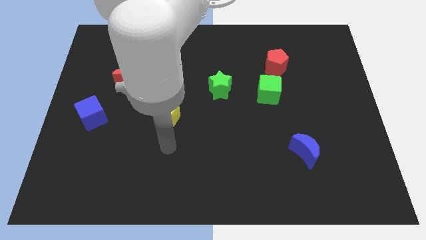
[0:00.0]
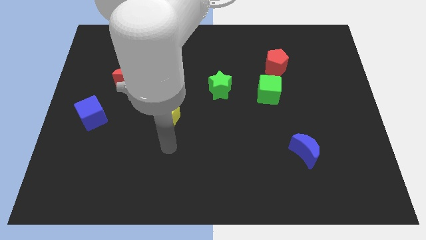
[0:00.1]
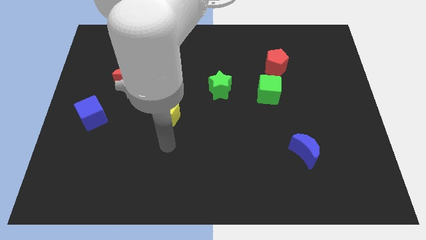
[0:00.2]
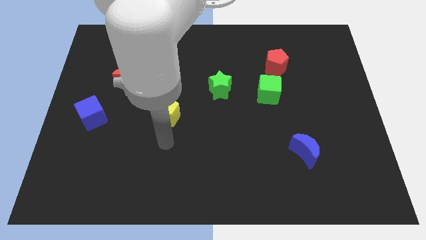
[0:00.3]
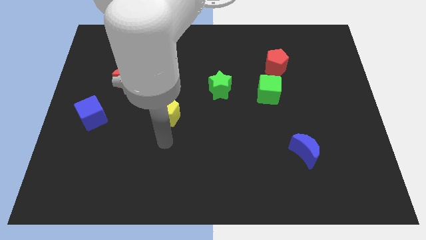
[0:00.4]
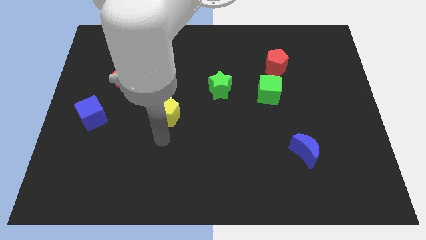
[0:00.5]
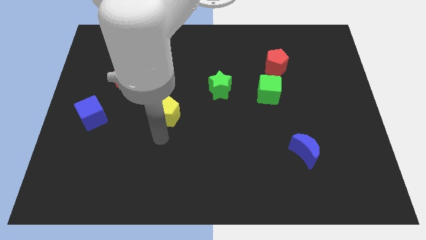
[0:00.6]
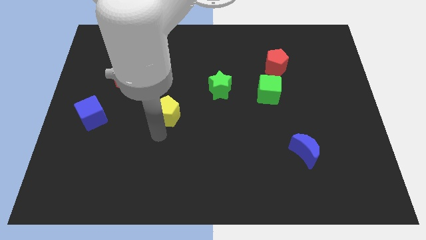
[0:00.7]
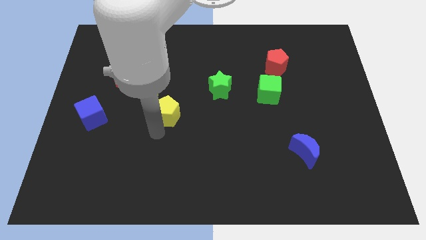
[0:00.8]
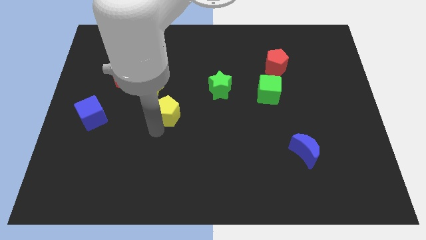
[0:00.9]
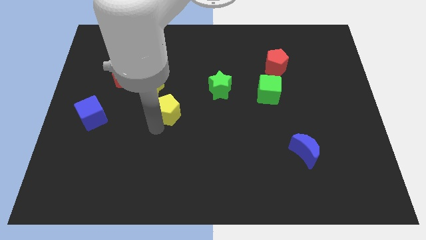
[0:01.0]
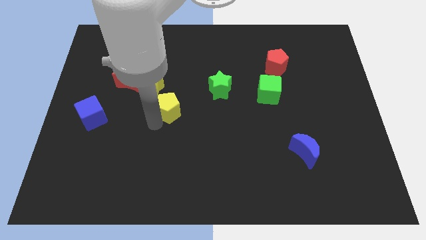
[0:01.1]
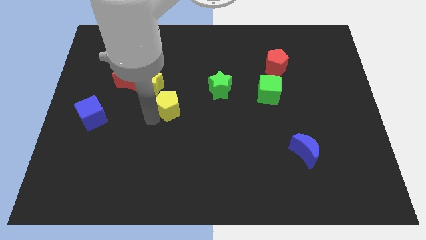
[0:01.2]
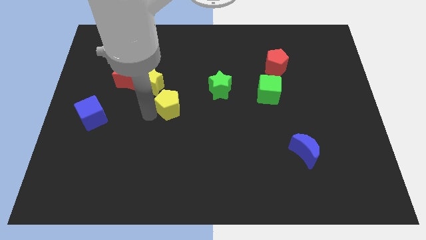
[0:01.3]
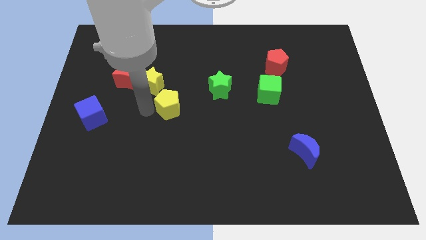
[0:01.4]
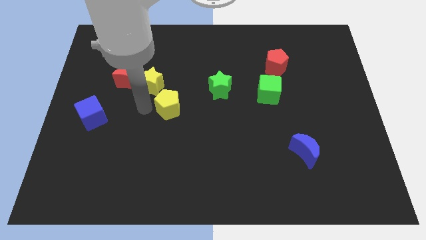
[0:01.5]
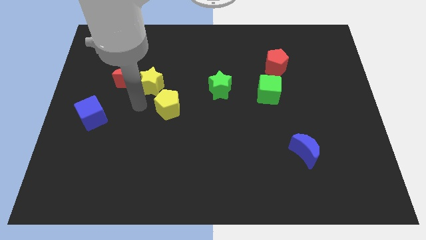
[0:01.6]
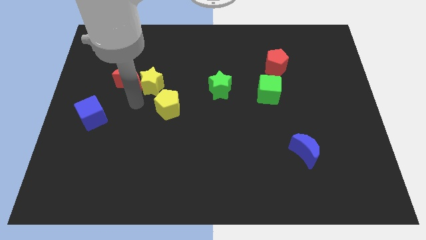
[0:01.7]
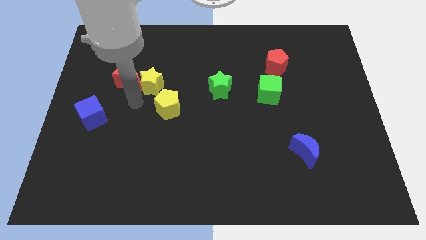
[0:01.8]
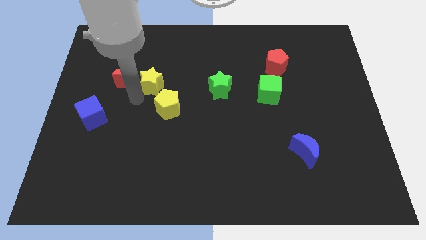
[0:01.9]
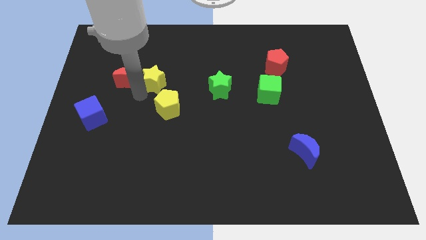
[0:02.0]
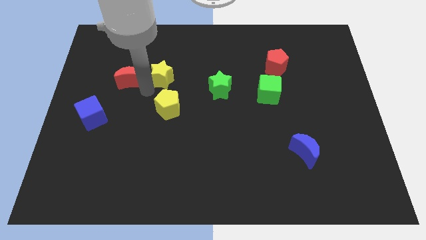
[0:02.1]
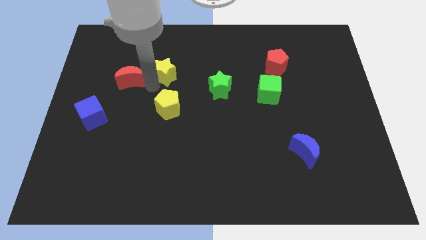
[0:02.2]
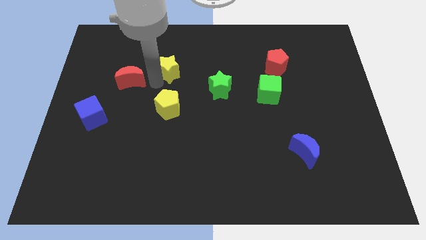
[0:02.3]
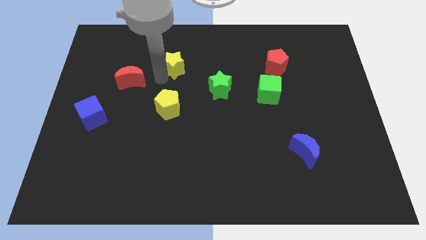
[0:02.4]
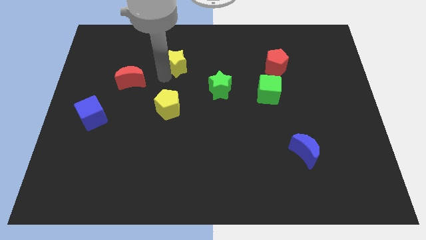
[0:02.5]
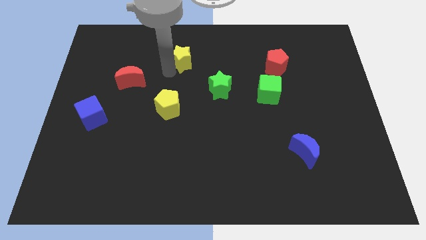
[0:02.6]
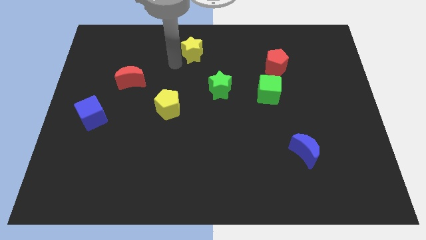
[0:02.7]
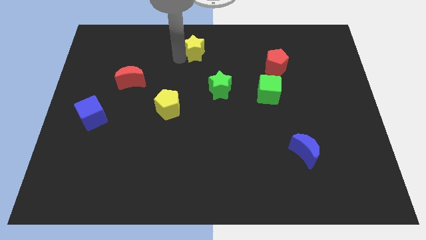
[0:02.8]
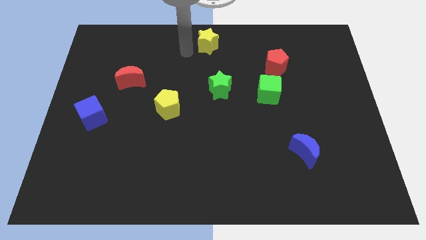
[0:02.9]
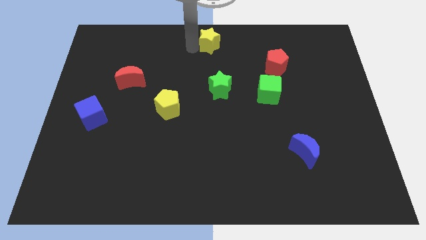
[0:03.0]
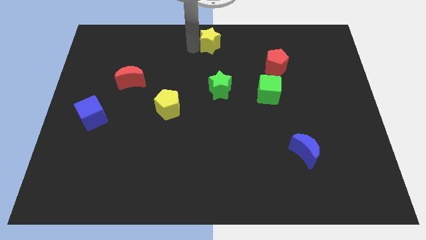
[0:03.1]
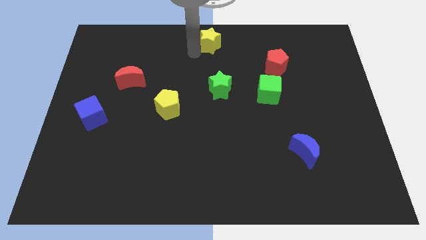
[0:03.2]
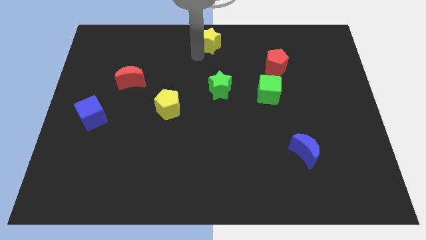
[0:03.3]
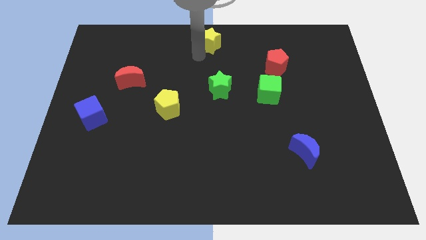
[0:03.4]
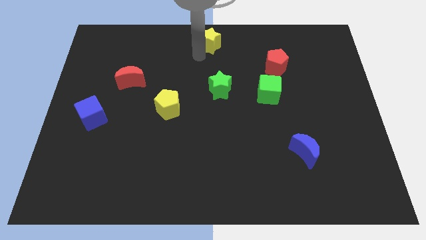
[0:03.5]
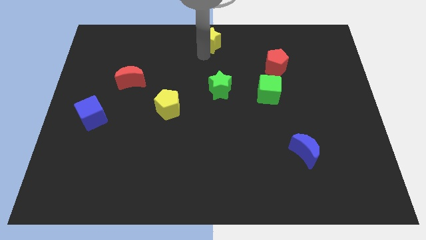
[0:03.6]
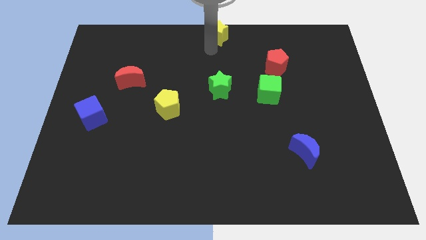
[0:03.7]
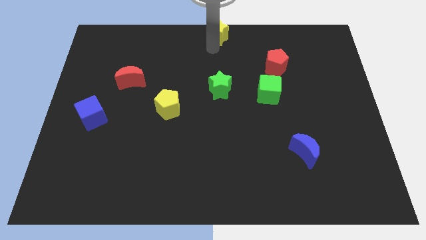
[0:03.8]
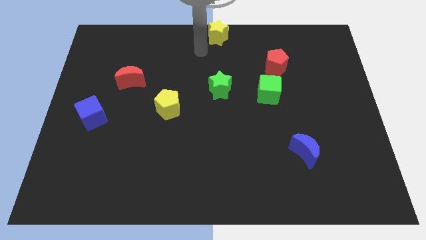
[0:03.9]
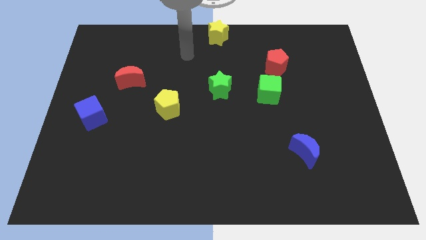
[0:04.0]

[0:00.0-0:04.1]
push yellow star to the top center of the board

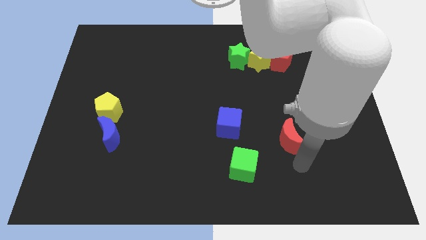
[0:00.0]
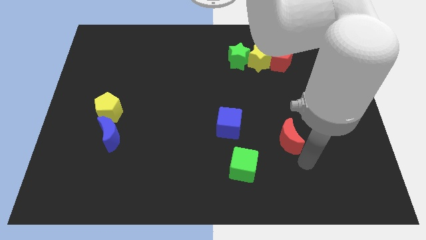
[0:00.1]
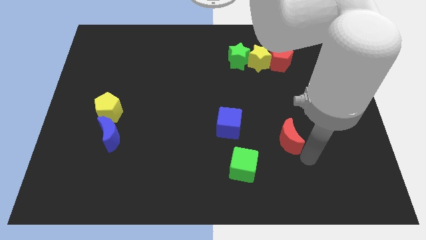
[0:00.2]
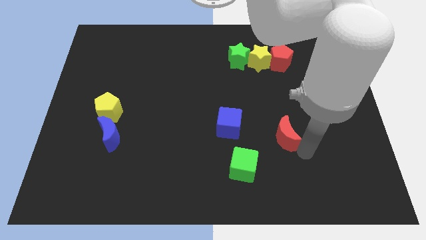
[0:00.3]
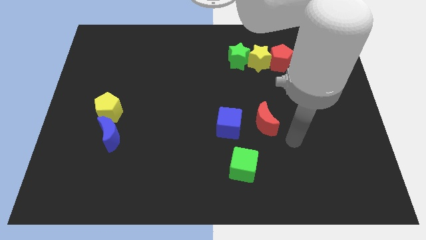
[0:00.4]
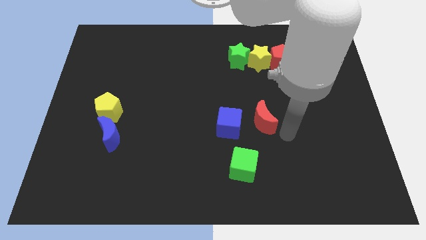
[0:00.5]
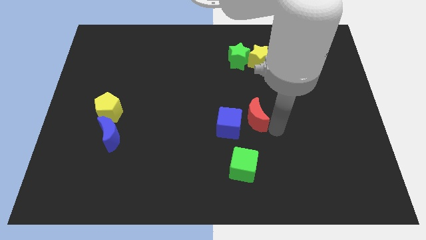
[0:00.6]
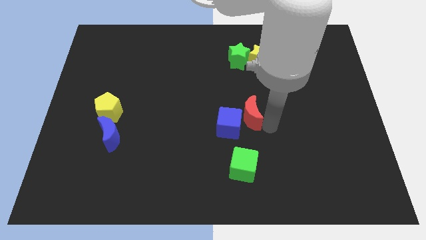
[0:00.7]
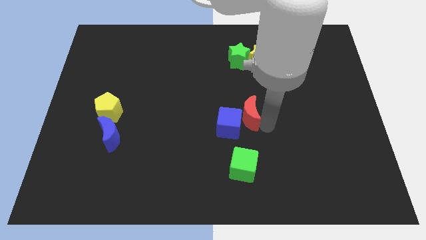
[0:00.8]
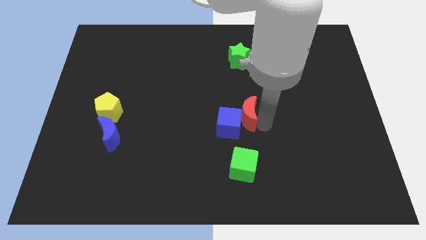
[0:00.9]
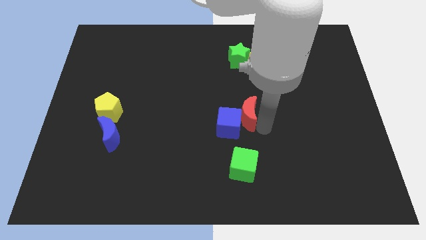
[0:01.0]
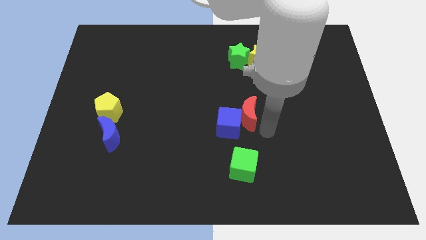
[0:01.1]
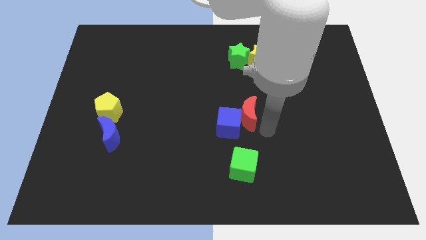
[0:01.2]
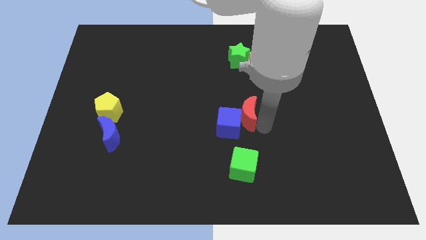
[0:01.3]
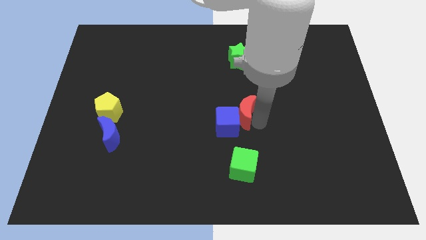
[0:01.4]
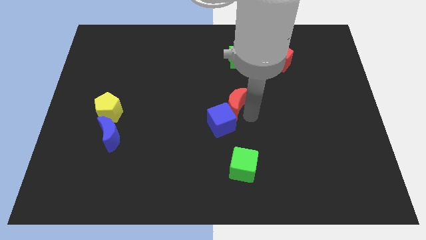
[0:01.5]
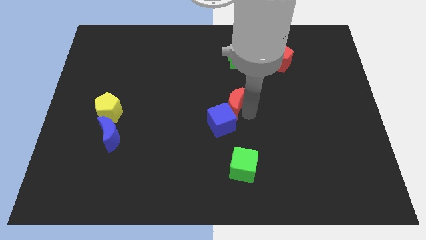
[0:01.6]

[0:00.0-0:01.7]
push red crescent into blue cube

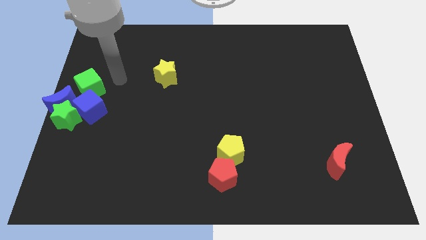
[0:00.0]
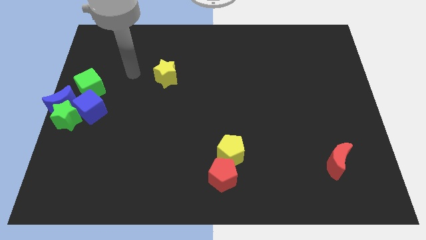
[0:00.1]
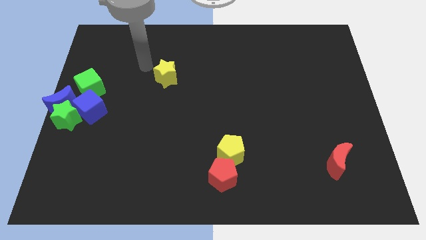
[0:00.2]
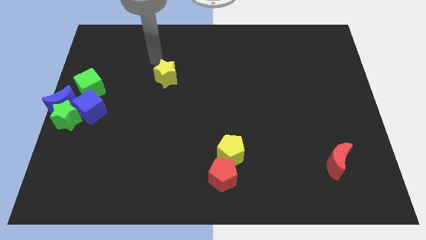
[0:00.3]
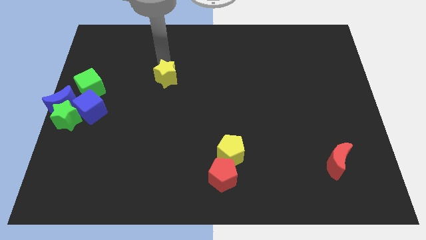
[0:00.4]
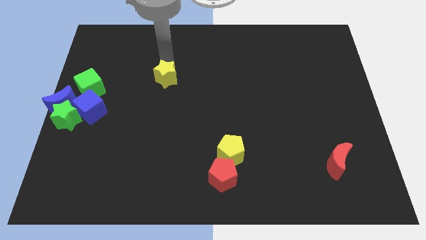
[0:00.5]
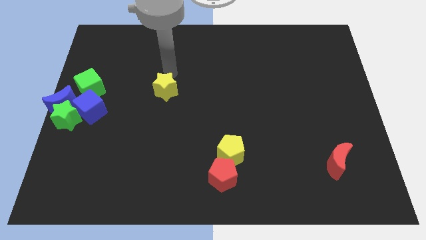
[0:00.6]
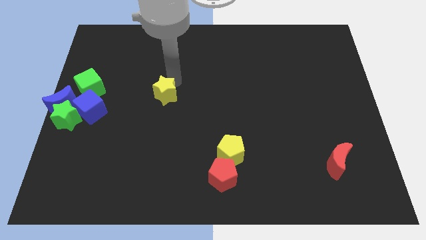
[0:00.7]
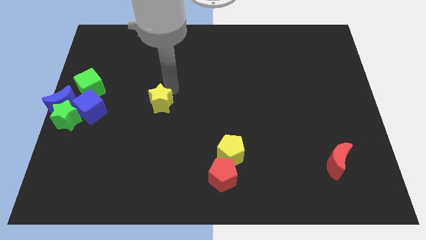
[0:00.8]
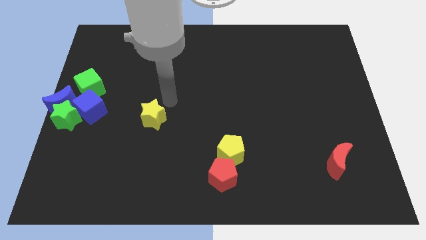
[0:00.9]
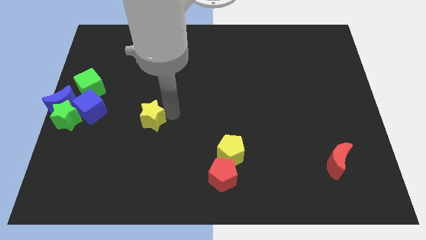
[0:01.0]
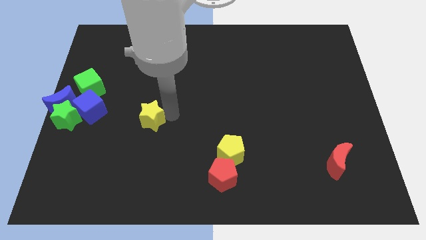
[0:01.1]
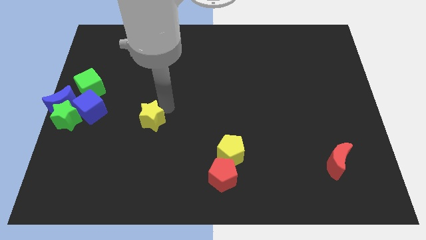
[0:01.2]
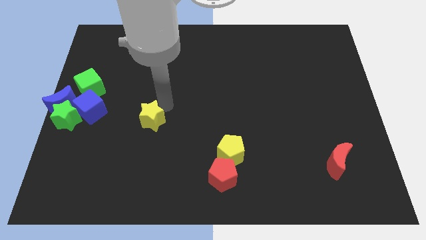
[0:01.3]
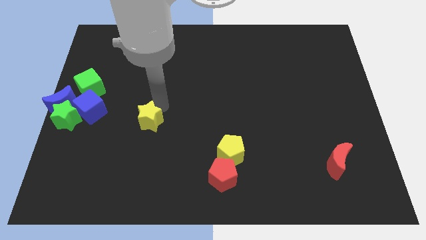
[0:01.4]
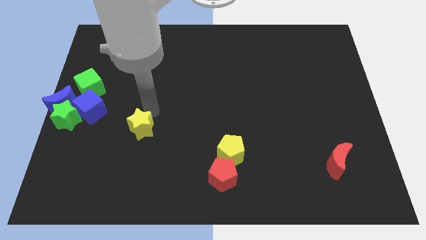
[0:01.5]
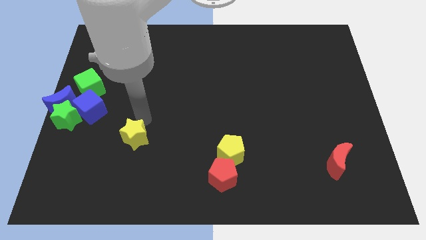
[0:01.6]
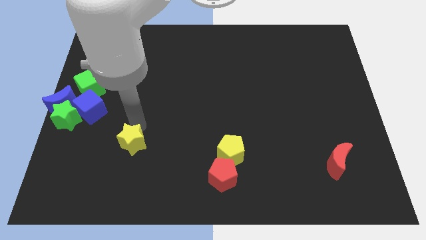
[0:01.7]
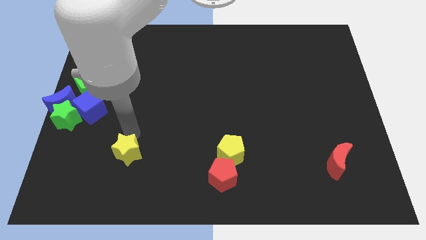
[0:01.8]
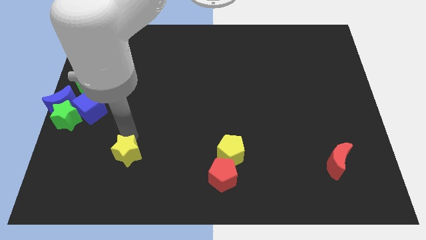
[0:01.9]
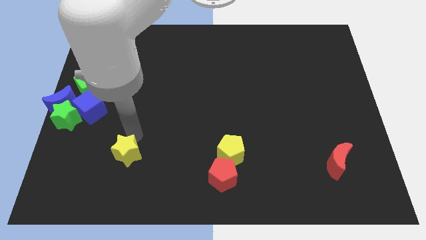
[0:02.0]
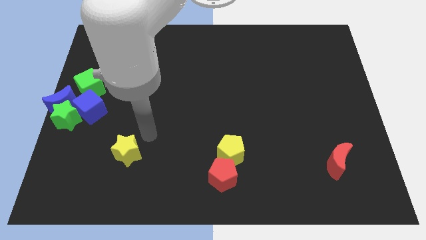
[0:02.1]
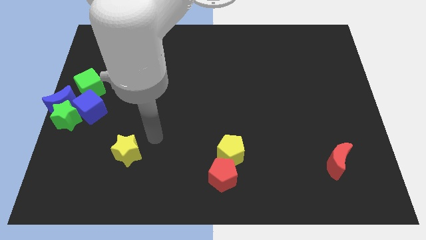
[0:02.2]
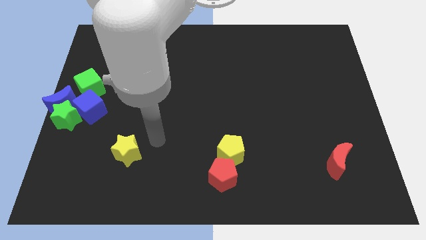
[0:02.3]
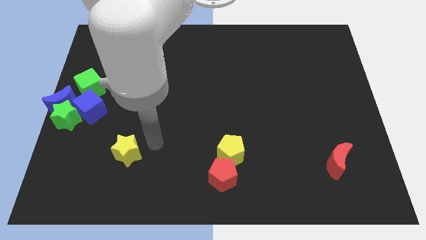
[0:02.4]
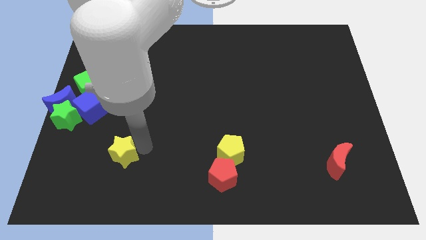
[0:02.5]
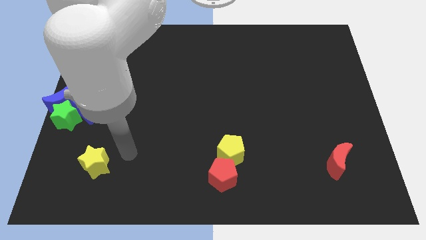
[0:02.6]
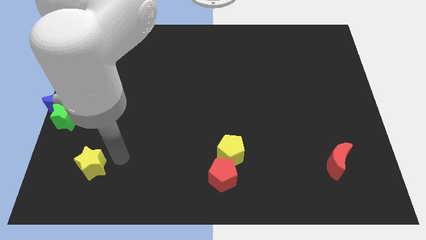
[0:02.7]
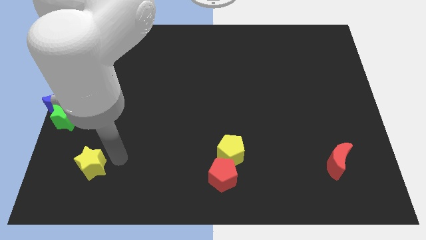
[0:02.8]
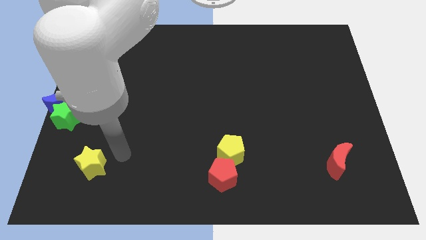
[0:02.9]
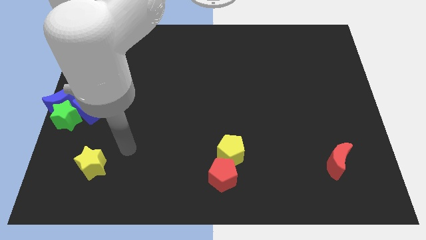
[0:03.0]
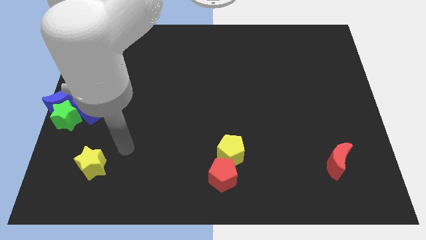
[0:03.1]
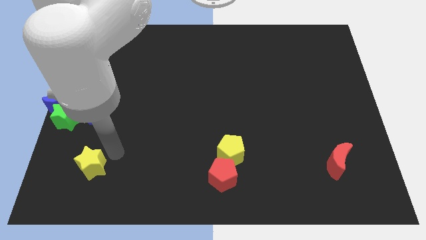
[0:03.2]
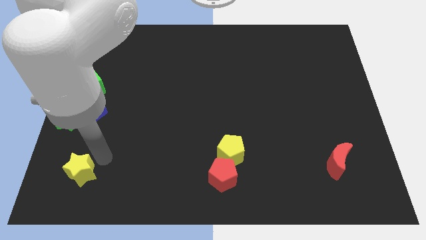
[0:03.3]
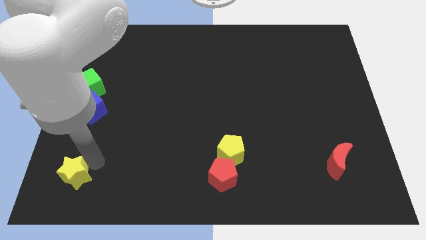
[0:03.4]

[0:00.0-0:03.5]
drag the yellow star horizontally to the left side of the red pentagon
